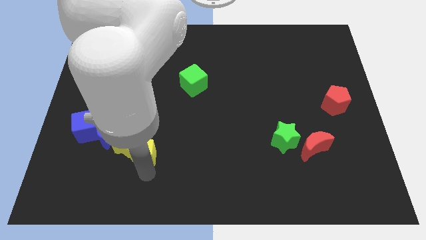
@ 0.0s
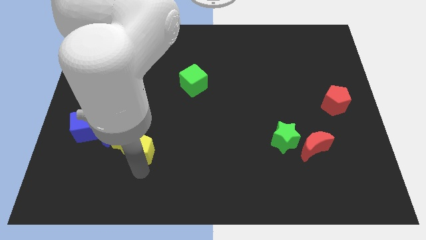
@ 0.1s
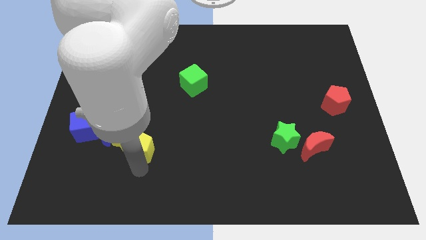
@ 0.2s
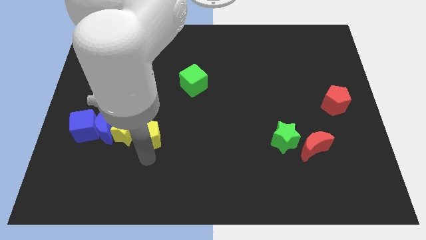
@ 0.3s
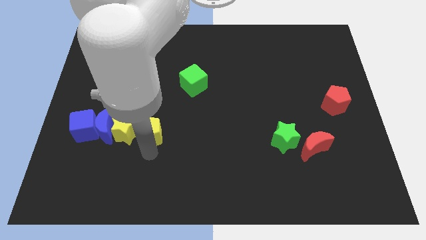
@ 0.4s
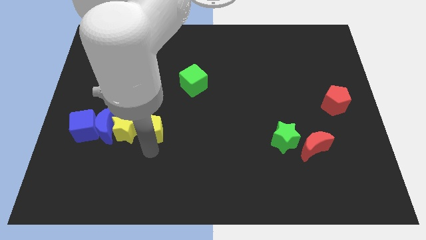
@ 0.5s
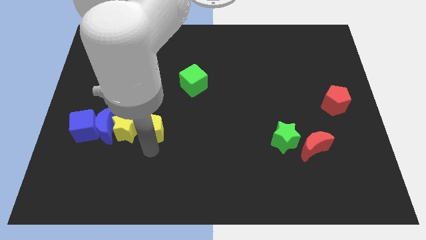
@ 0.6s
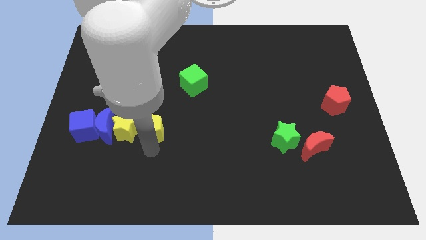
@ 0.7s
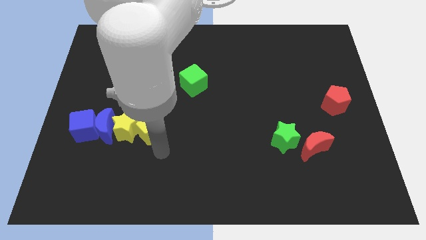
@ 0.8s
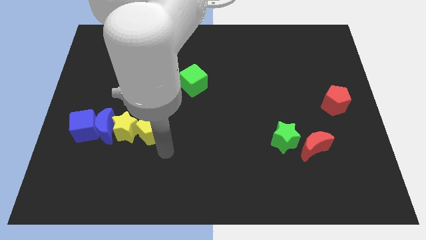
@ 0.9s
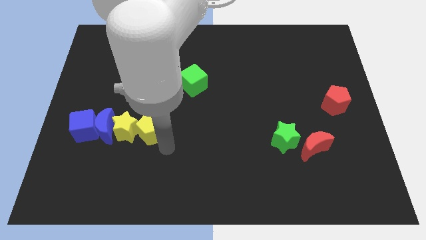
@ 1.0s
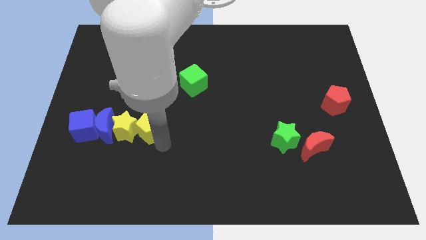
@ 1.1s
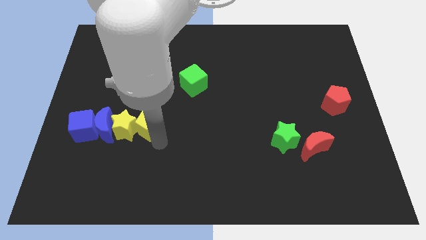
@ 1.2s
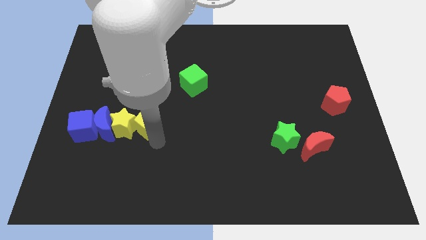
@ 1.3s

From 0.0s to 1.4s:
place the yellow pentagon right to the yellow star

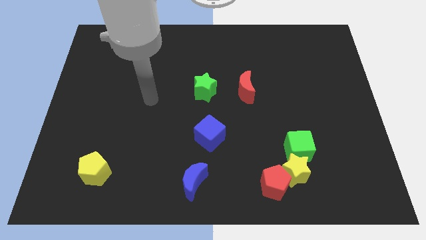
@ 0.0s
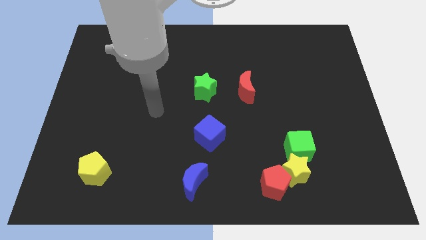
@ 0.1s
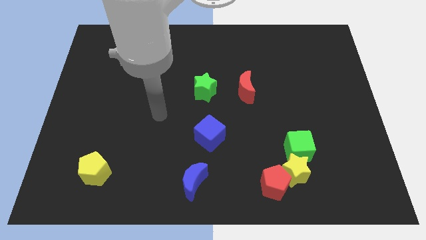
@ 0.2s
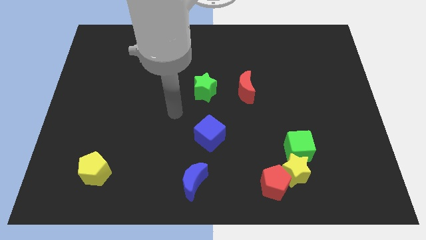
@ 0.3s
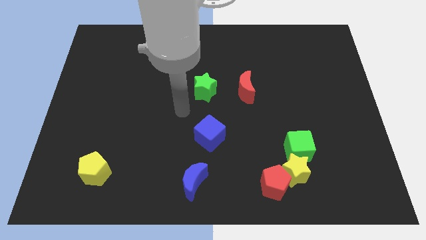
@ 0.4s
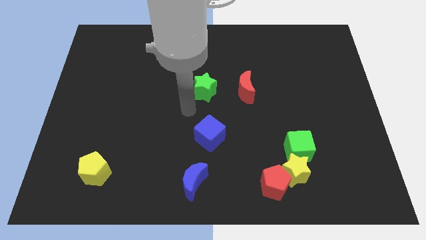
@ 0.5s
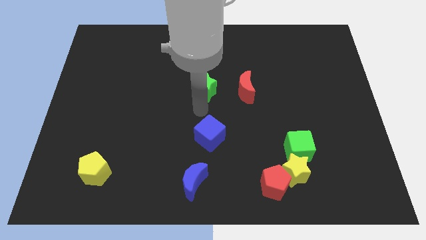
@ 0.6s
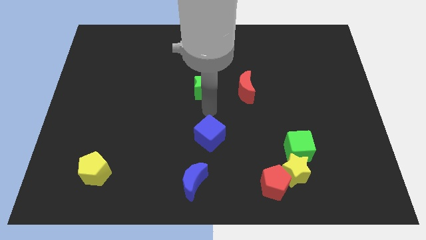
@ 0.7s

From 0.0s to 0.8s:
move arm at the bottom of green star

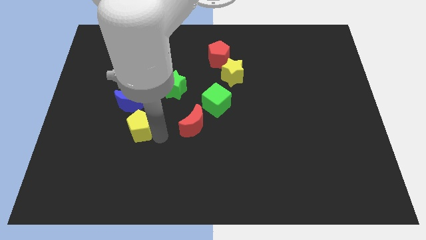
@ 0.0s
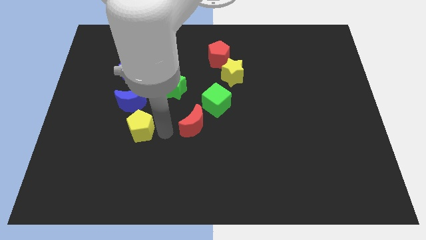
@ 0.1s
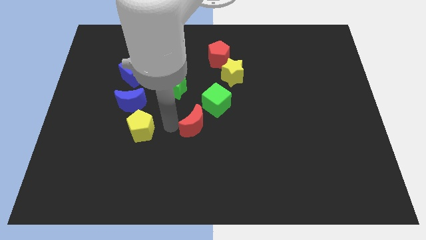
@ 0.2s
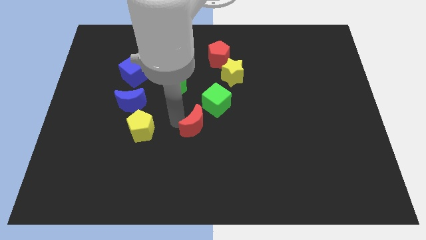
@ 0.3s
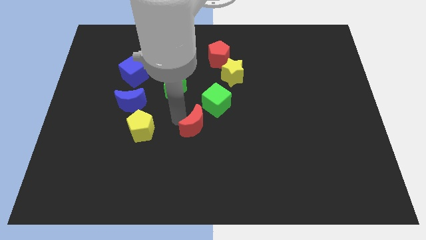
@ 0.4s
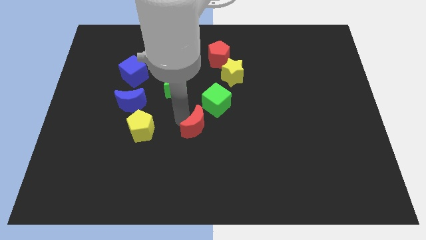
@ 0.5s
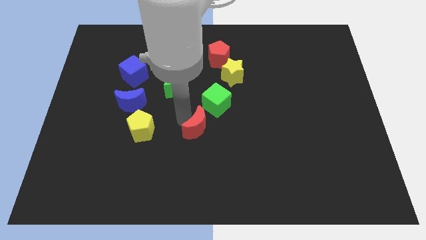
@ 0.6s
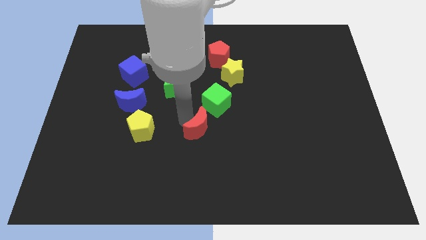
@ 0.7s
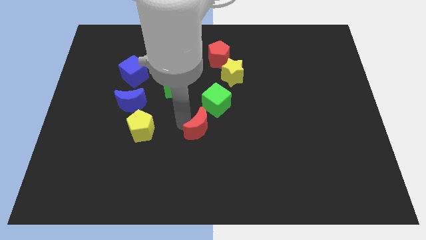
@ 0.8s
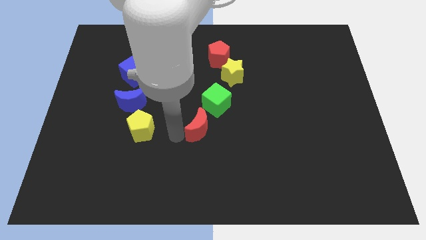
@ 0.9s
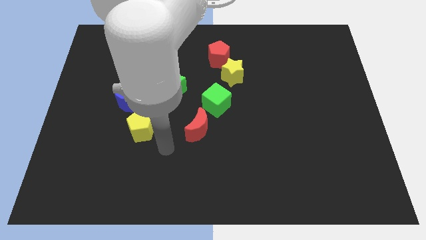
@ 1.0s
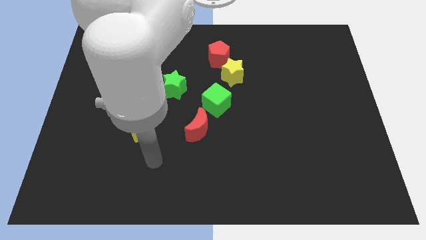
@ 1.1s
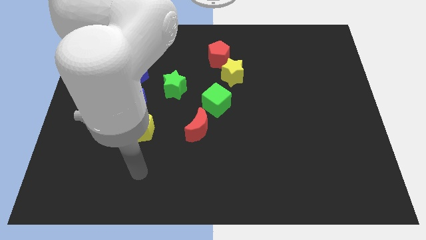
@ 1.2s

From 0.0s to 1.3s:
slightly move the red crescent to the right of the board

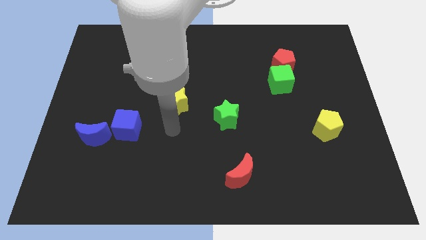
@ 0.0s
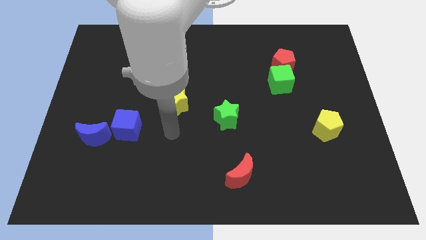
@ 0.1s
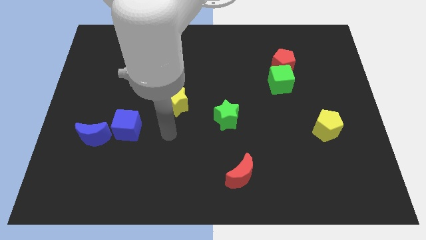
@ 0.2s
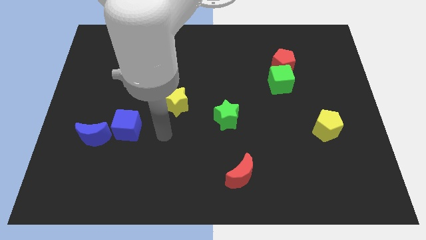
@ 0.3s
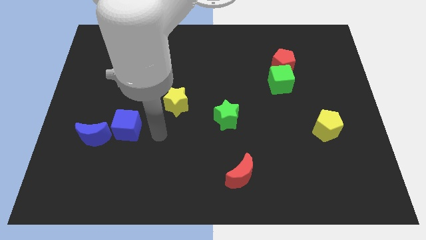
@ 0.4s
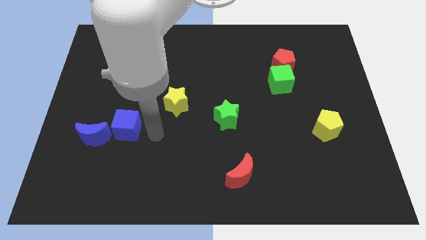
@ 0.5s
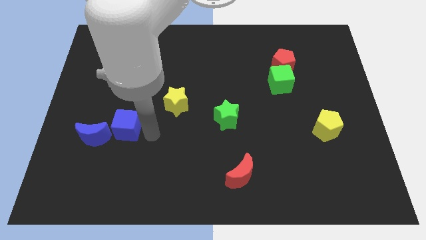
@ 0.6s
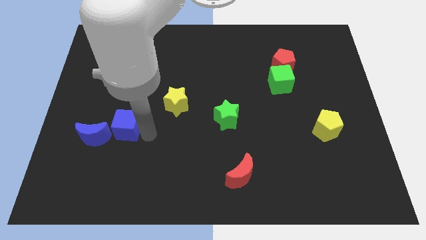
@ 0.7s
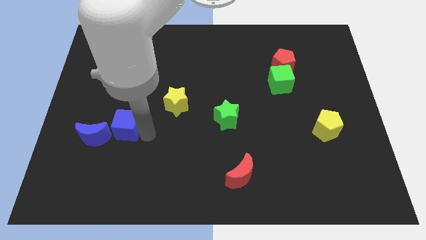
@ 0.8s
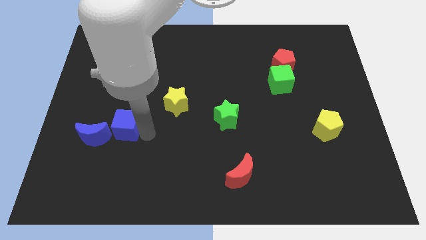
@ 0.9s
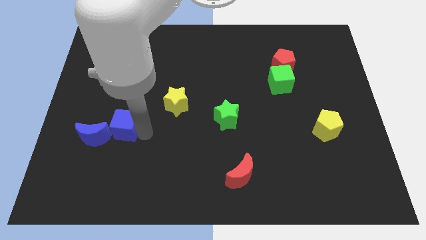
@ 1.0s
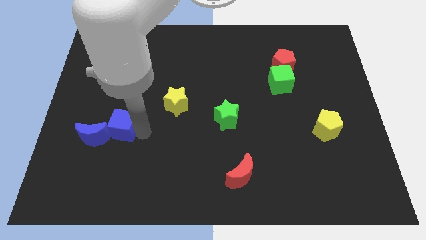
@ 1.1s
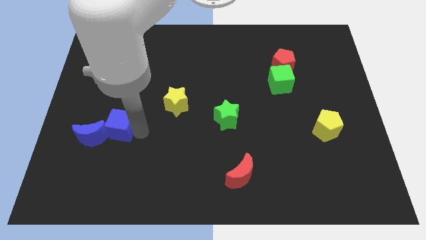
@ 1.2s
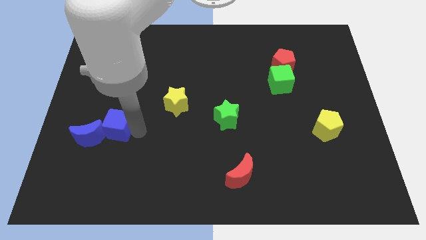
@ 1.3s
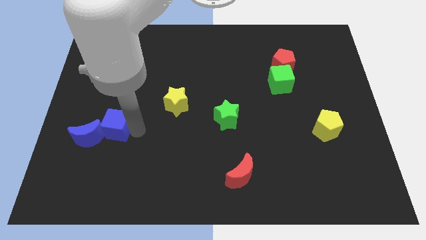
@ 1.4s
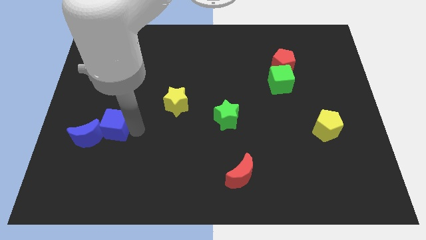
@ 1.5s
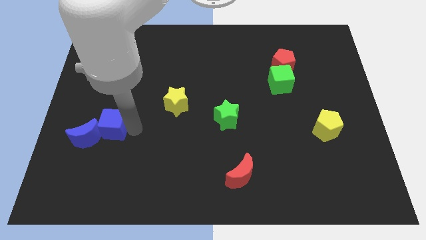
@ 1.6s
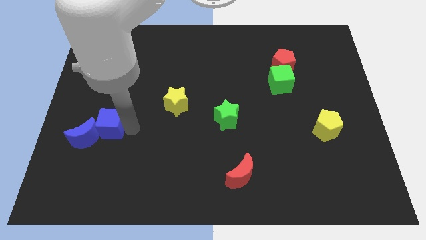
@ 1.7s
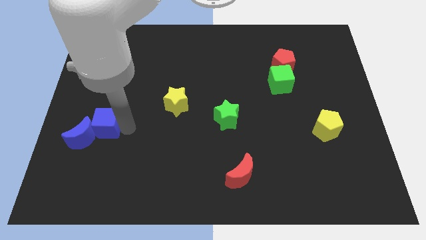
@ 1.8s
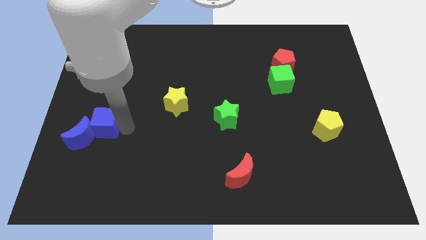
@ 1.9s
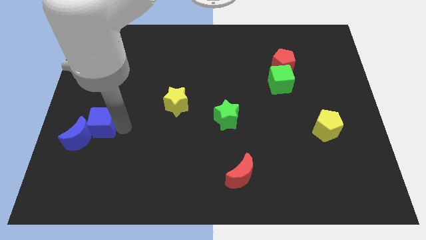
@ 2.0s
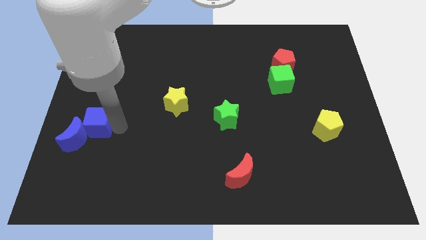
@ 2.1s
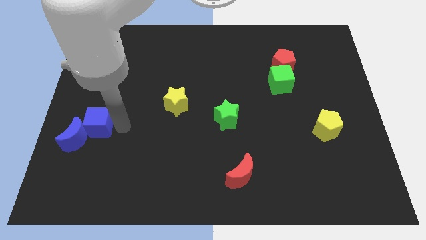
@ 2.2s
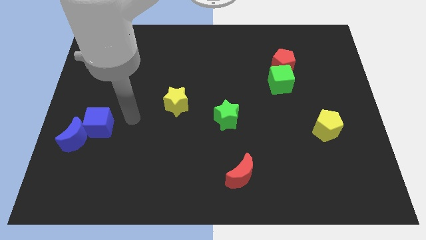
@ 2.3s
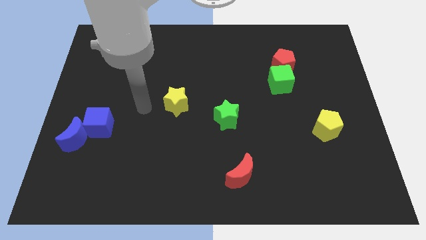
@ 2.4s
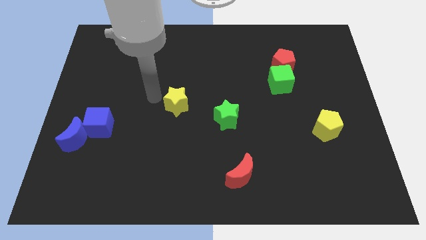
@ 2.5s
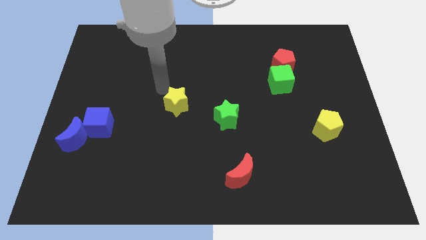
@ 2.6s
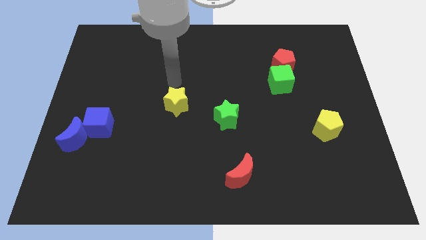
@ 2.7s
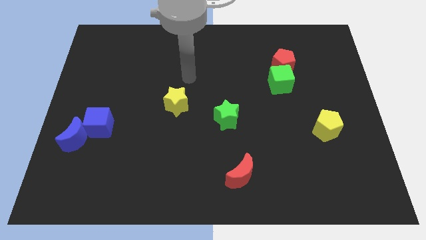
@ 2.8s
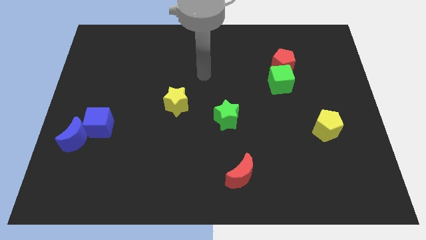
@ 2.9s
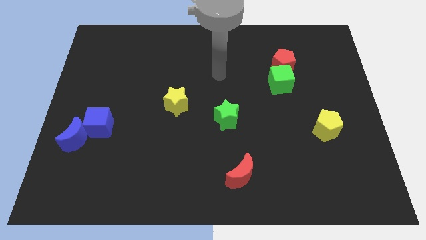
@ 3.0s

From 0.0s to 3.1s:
move the blue cube and blue moon to the center left

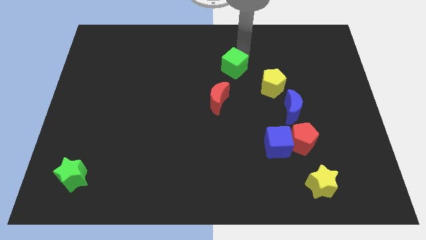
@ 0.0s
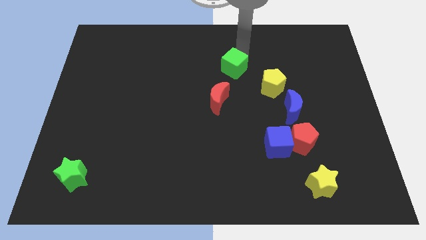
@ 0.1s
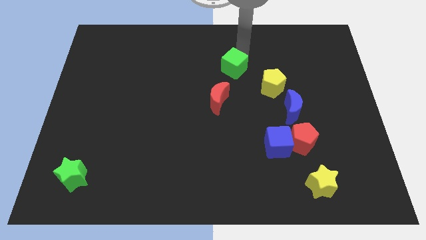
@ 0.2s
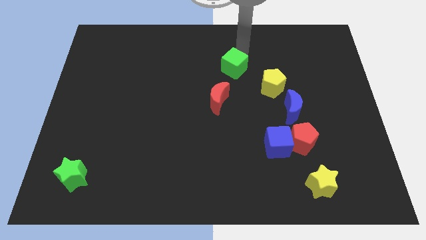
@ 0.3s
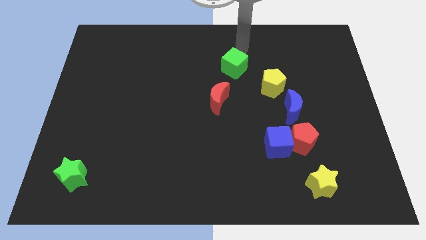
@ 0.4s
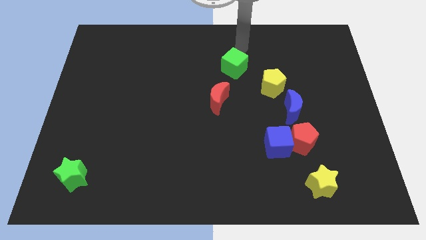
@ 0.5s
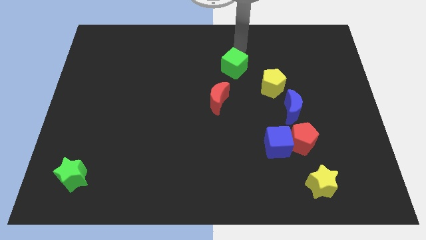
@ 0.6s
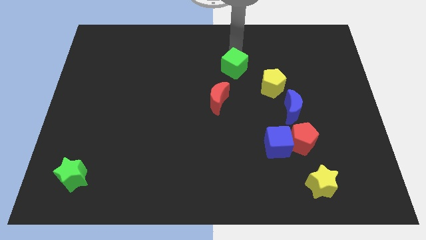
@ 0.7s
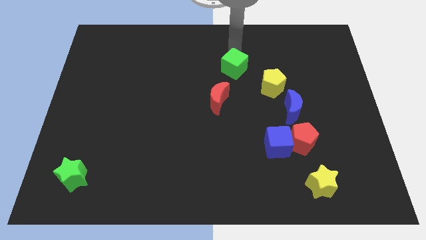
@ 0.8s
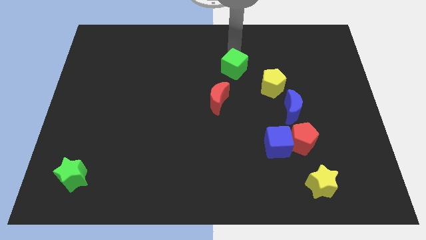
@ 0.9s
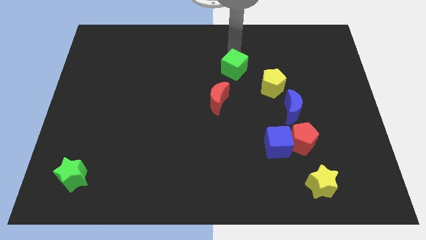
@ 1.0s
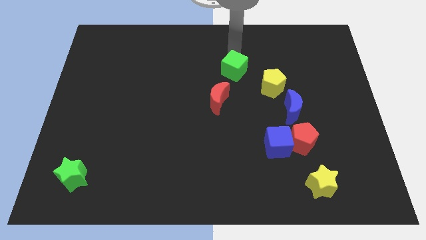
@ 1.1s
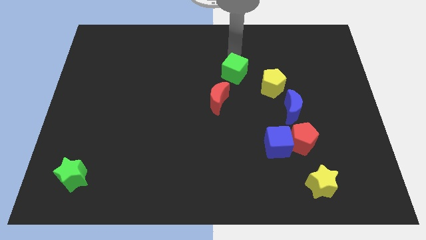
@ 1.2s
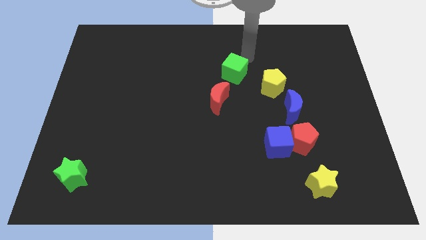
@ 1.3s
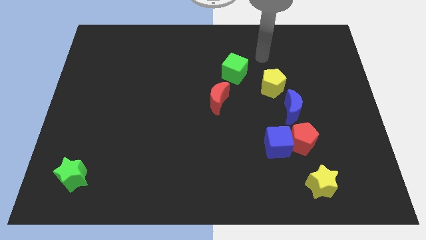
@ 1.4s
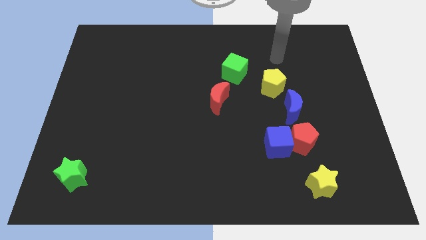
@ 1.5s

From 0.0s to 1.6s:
push green block towards the red crescent

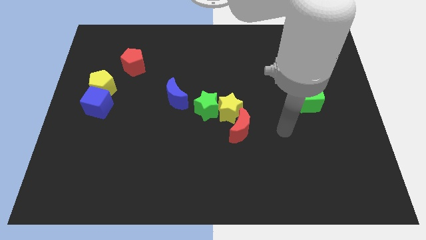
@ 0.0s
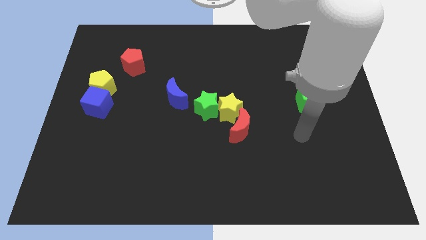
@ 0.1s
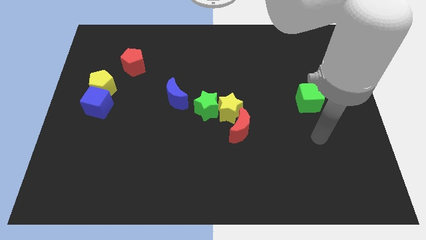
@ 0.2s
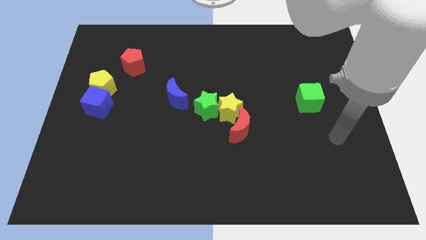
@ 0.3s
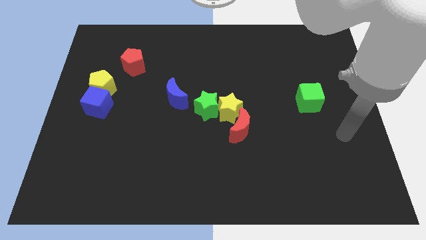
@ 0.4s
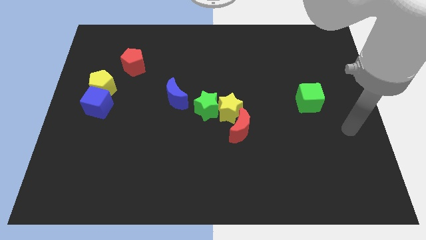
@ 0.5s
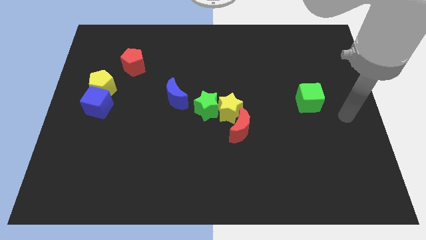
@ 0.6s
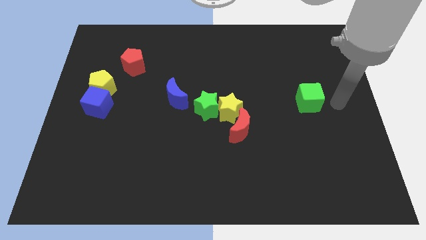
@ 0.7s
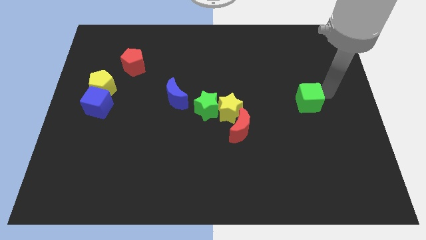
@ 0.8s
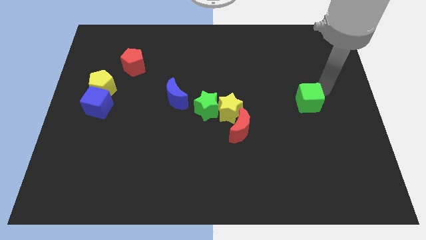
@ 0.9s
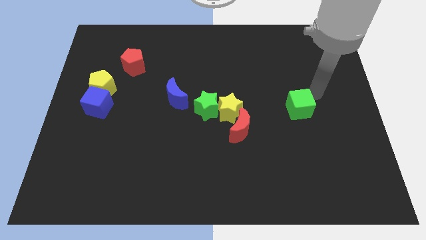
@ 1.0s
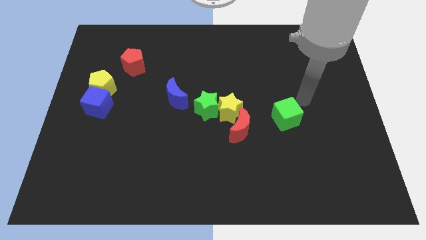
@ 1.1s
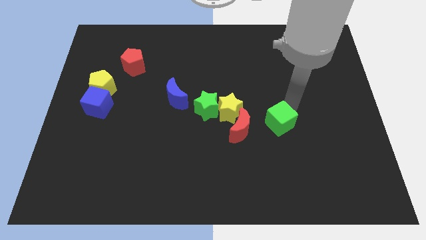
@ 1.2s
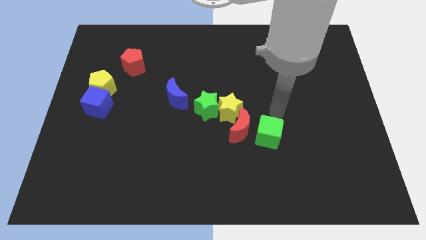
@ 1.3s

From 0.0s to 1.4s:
place the green cube to the right of the red crescent
